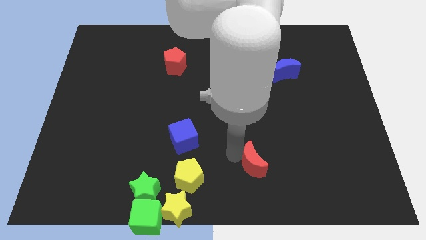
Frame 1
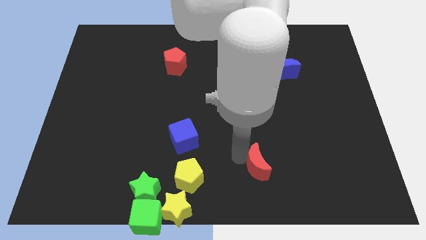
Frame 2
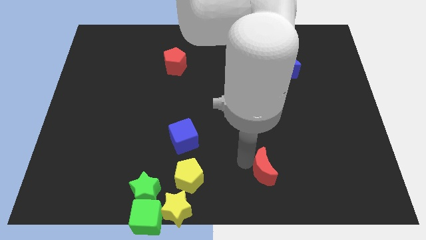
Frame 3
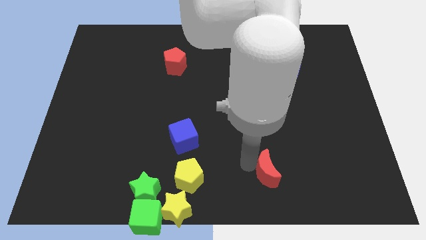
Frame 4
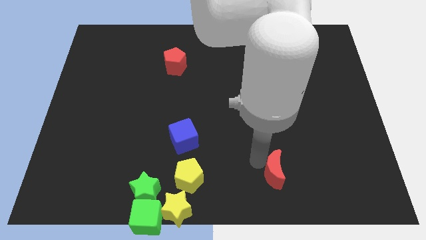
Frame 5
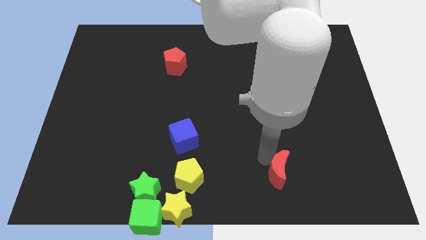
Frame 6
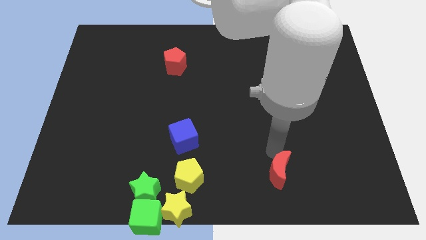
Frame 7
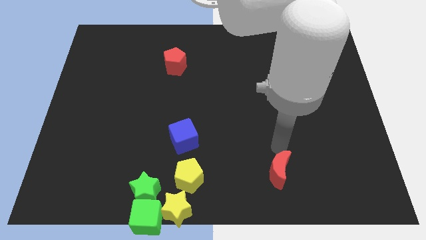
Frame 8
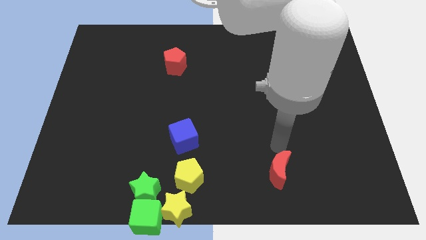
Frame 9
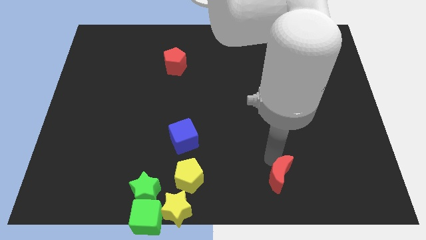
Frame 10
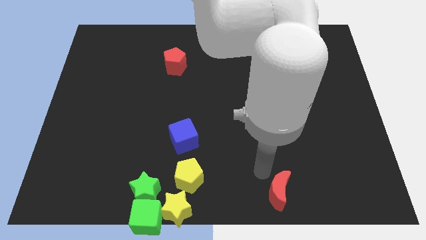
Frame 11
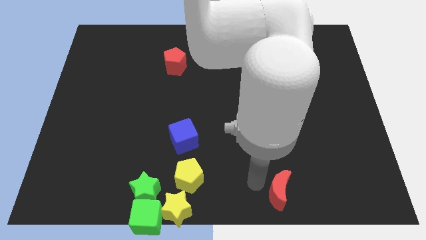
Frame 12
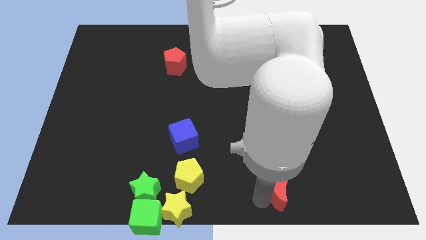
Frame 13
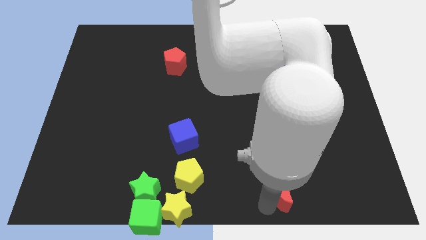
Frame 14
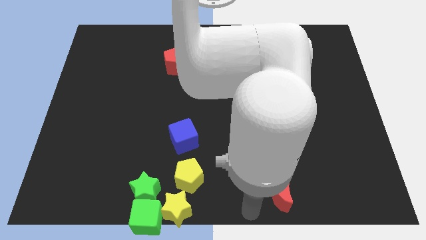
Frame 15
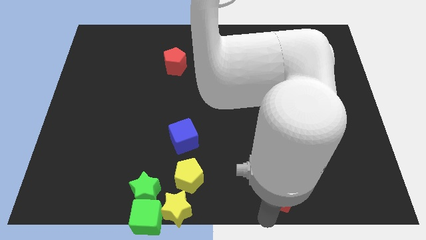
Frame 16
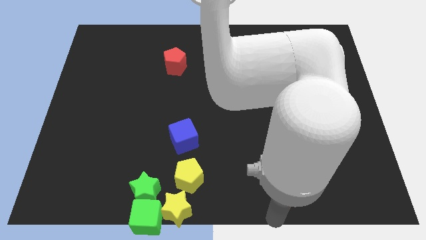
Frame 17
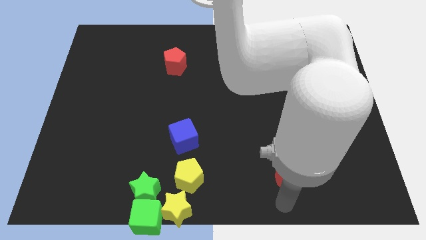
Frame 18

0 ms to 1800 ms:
move the red crescent to the right of the yellow pentagon horizontally

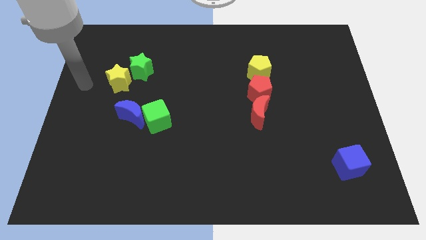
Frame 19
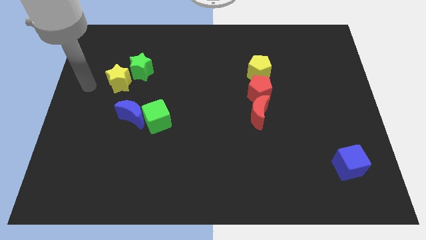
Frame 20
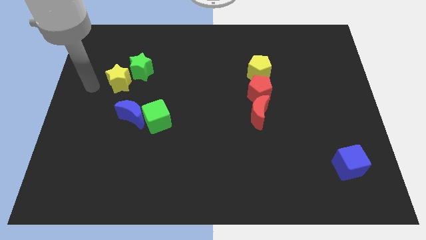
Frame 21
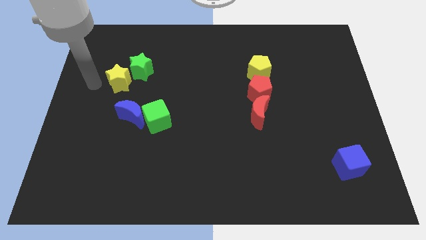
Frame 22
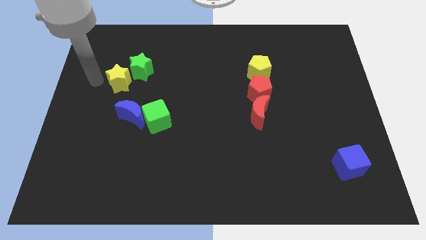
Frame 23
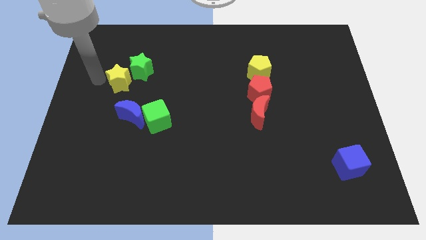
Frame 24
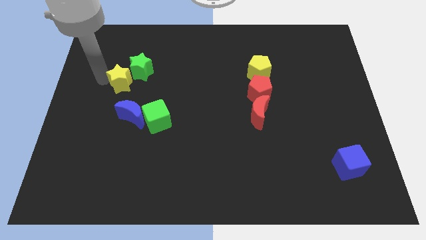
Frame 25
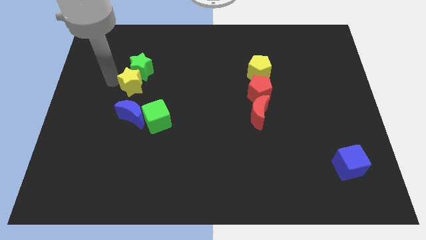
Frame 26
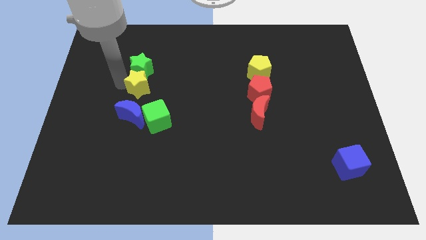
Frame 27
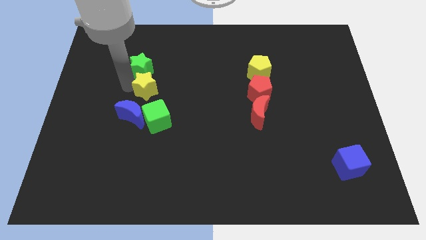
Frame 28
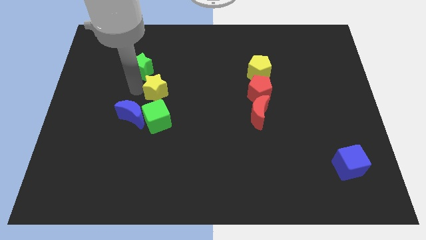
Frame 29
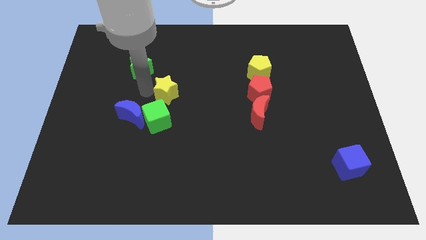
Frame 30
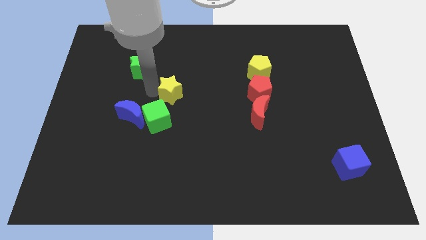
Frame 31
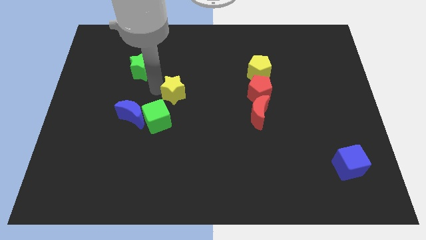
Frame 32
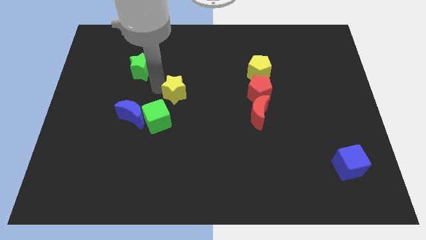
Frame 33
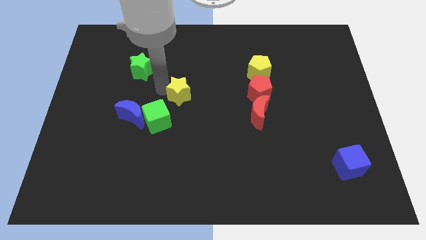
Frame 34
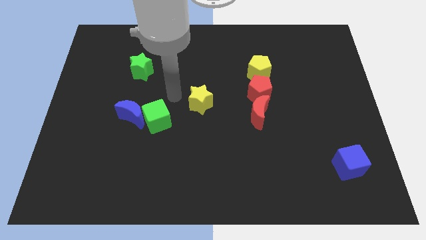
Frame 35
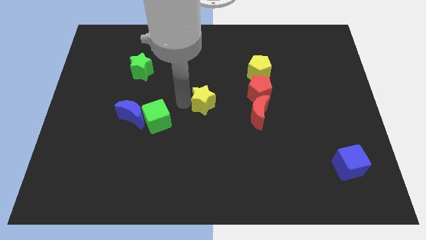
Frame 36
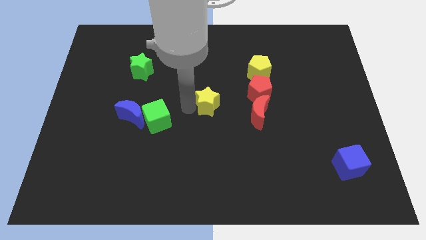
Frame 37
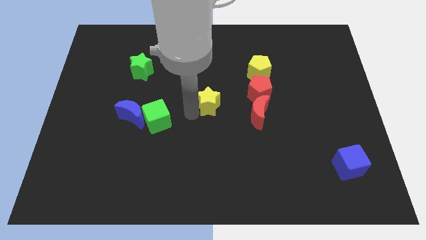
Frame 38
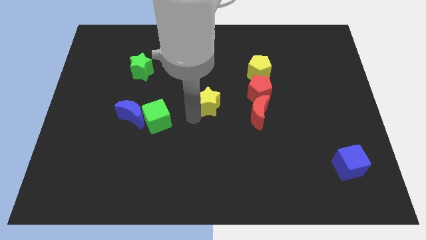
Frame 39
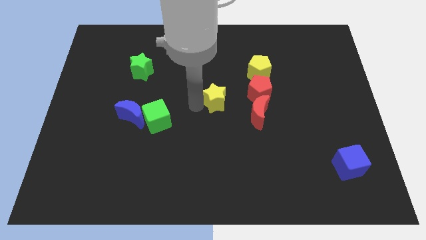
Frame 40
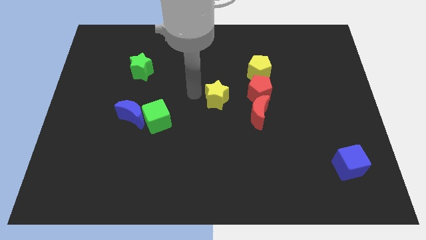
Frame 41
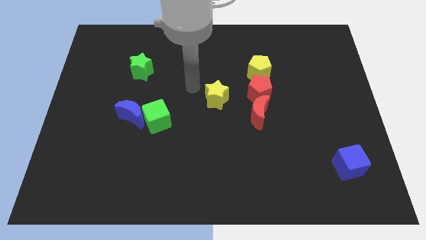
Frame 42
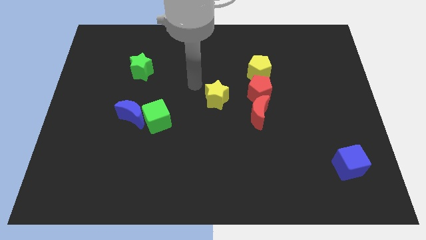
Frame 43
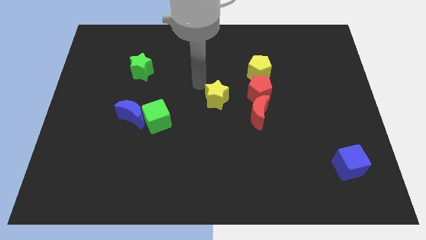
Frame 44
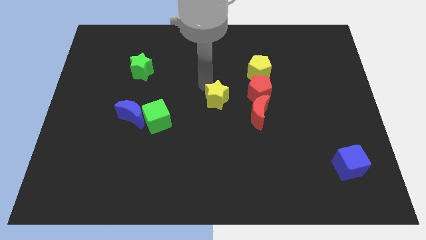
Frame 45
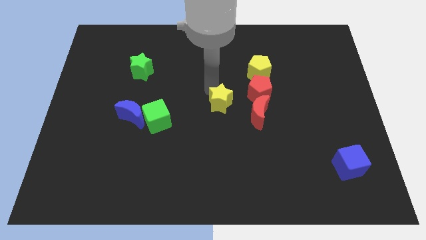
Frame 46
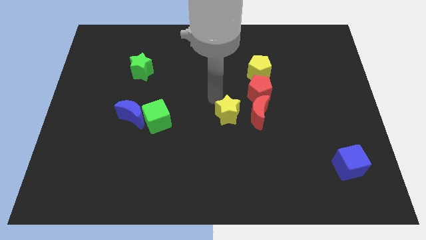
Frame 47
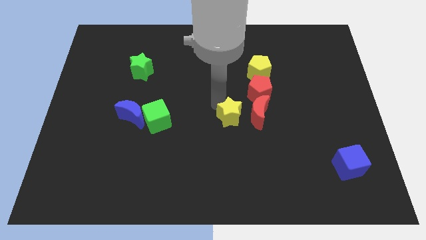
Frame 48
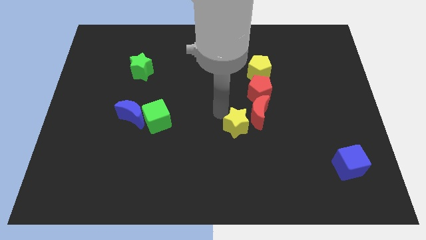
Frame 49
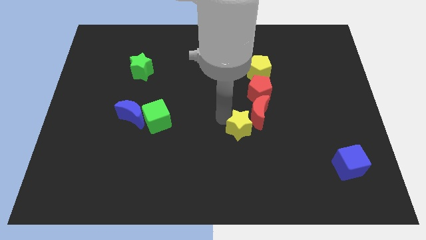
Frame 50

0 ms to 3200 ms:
place the yellow star at the bottom left side of red crescent

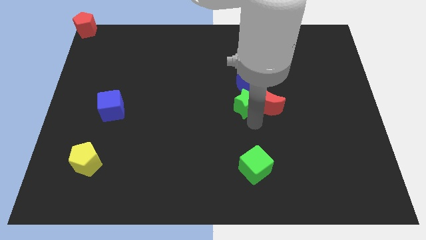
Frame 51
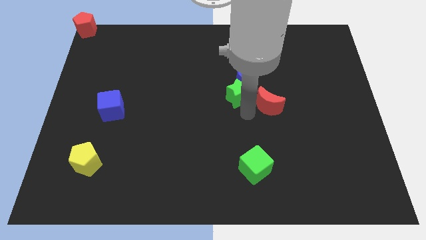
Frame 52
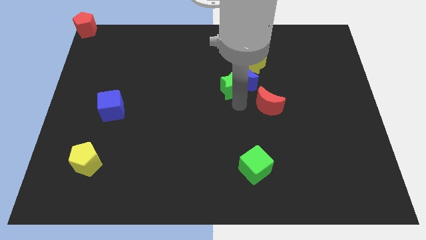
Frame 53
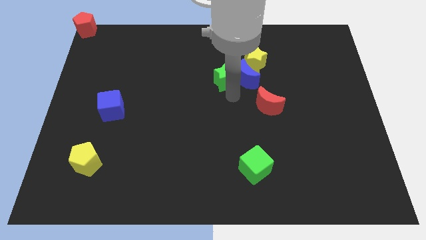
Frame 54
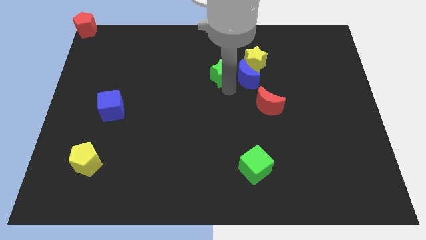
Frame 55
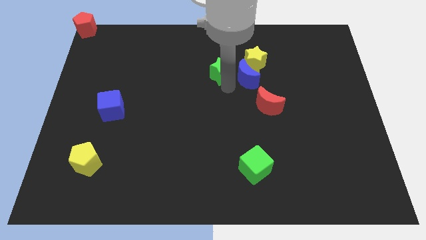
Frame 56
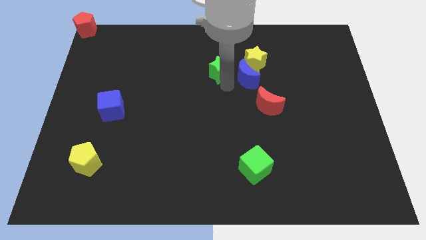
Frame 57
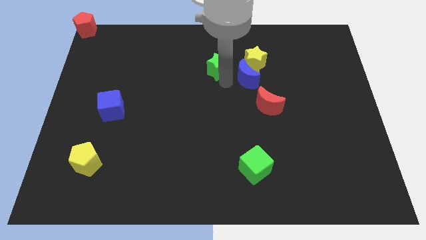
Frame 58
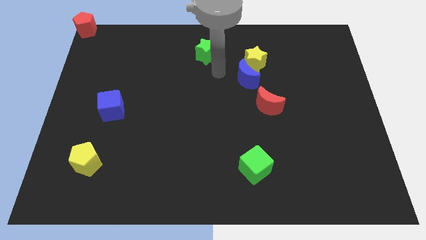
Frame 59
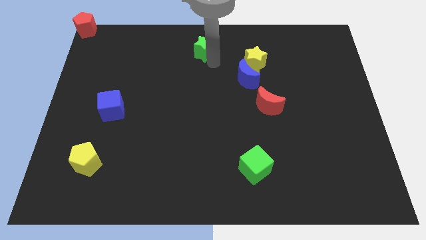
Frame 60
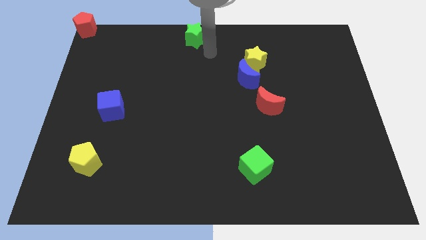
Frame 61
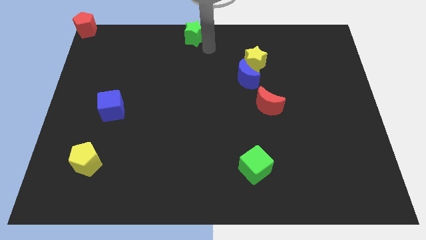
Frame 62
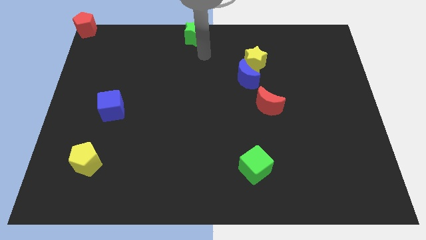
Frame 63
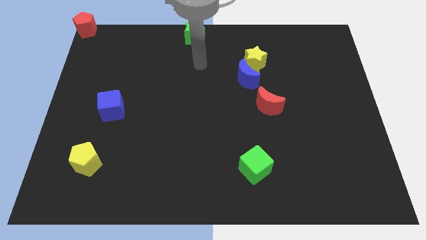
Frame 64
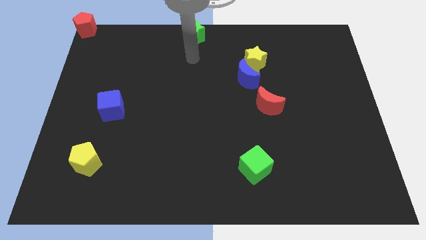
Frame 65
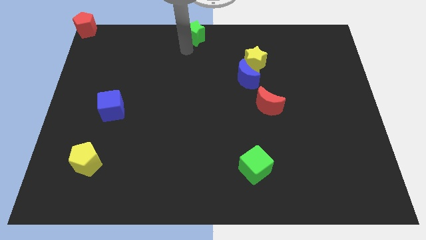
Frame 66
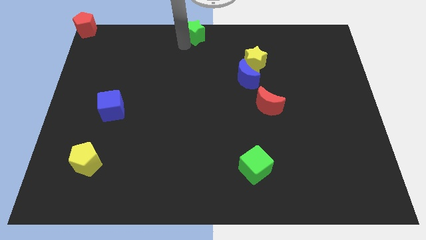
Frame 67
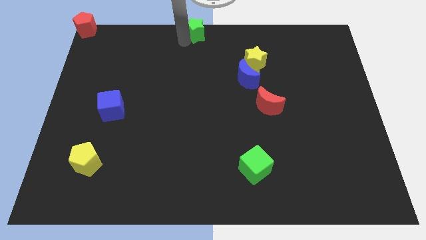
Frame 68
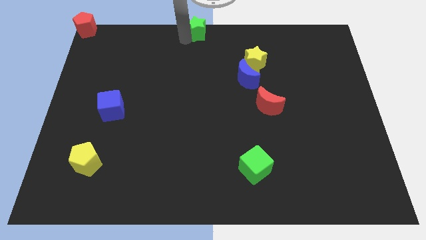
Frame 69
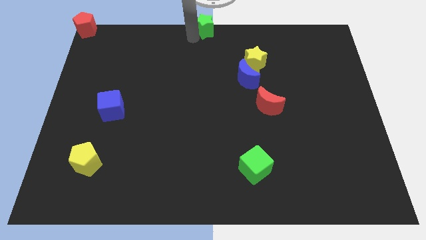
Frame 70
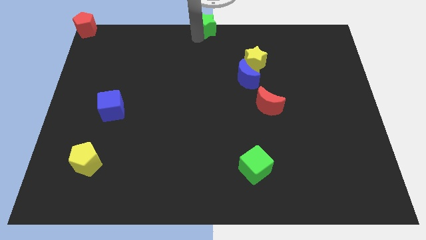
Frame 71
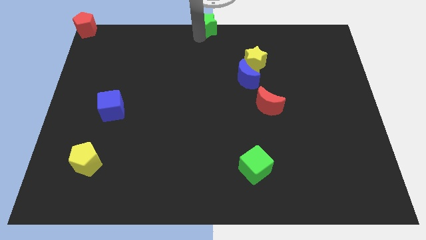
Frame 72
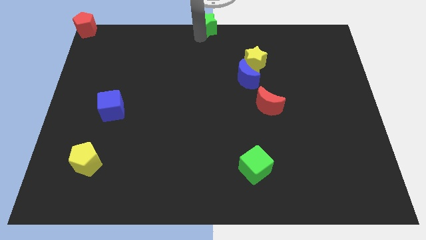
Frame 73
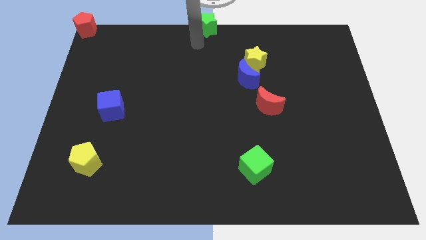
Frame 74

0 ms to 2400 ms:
move the green star towards the top center of the board

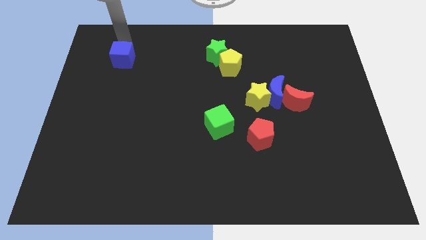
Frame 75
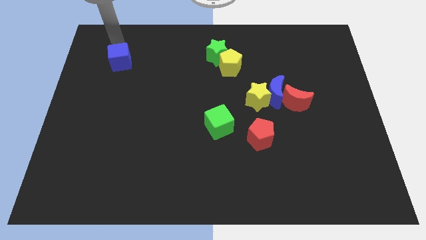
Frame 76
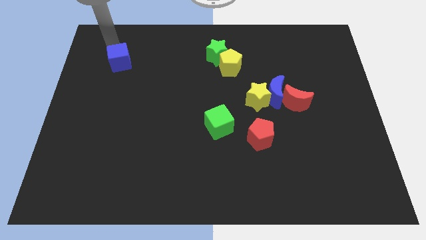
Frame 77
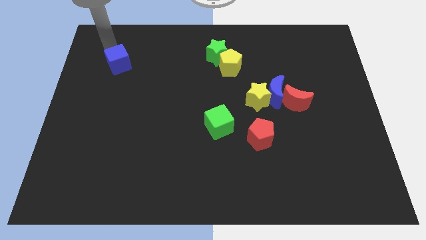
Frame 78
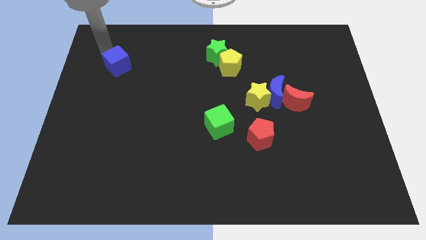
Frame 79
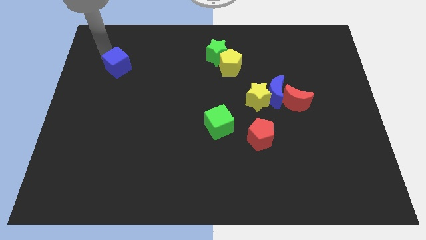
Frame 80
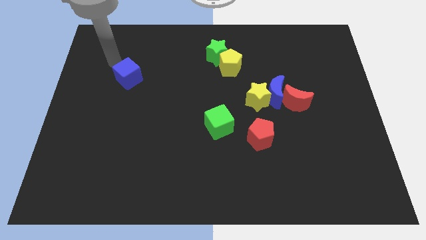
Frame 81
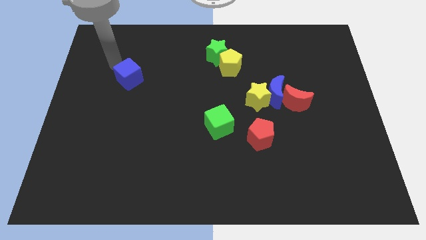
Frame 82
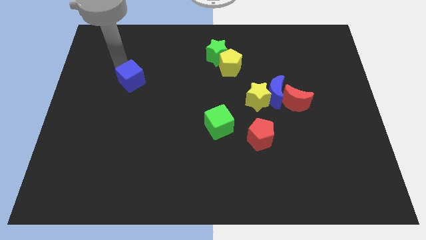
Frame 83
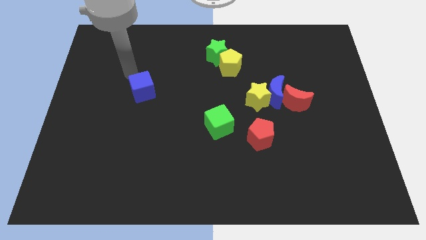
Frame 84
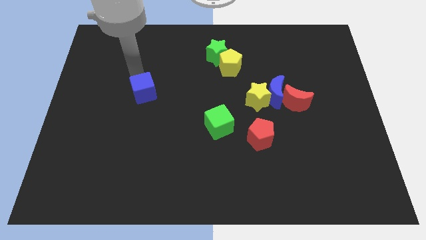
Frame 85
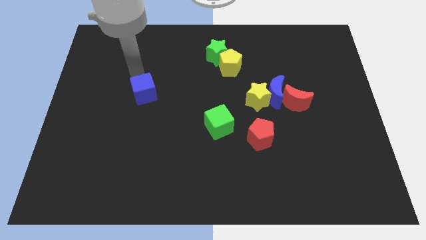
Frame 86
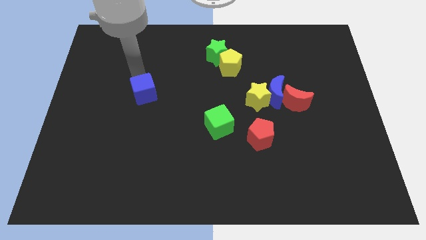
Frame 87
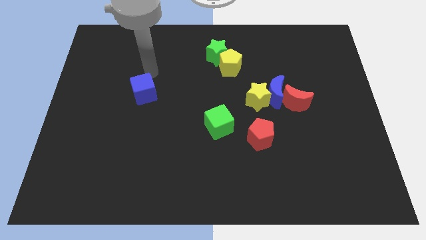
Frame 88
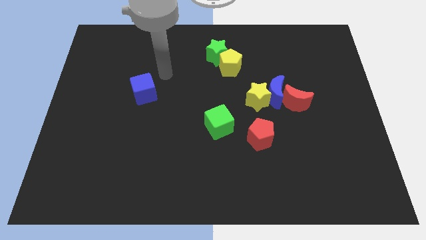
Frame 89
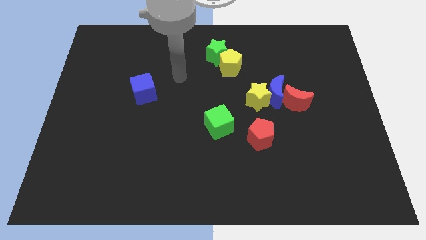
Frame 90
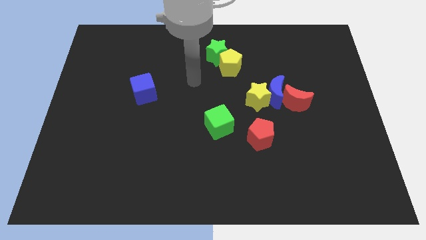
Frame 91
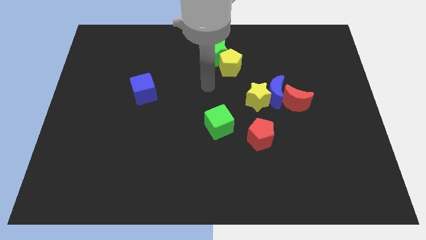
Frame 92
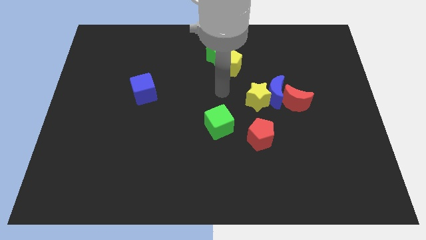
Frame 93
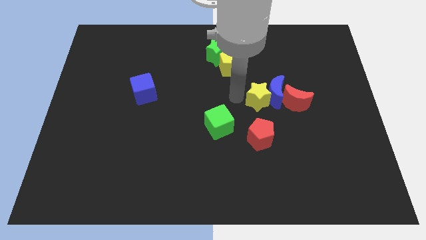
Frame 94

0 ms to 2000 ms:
move the blue cube towards the down of the board
